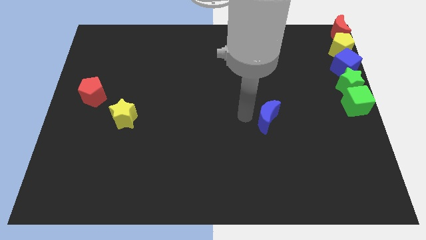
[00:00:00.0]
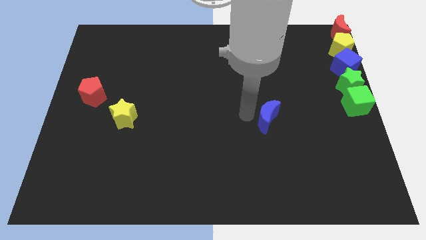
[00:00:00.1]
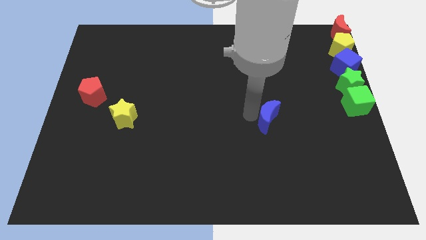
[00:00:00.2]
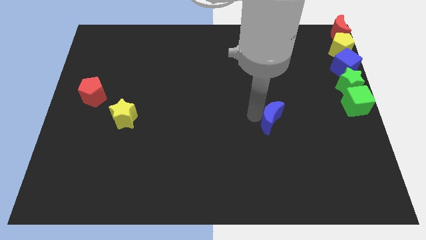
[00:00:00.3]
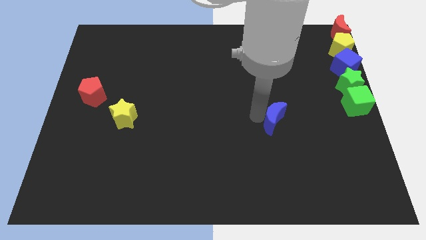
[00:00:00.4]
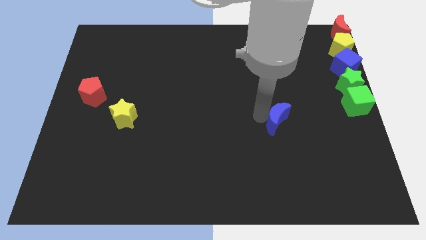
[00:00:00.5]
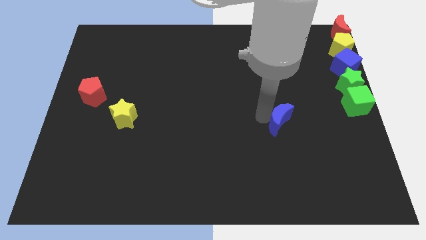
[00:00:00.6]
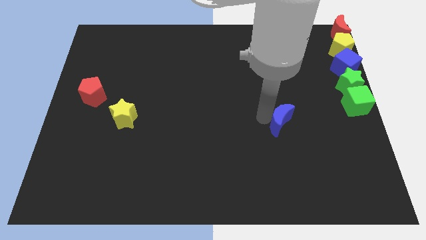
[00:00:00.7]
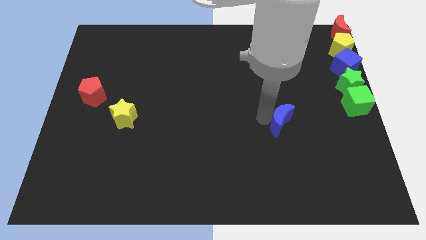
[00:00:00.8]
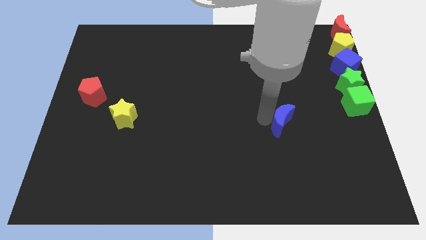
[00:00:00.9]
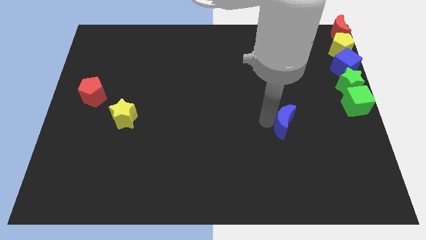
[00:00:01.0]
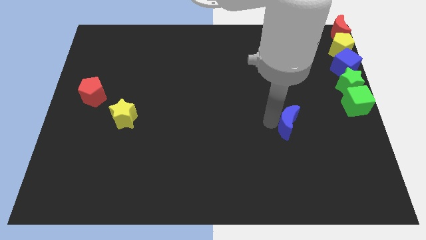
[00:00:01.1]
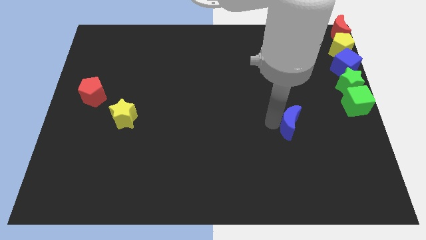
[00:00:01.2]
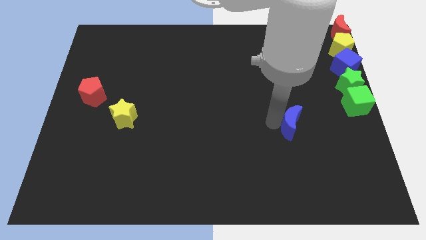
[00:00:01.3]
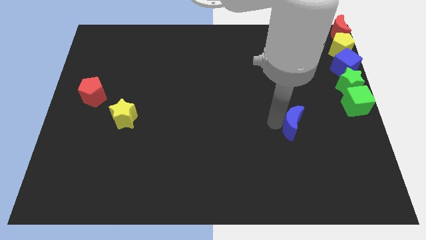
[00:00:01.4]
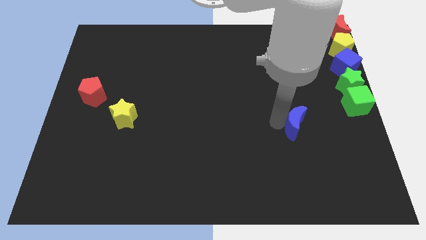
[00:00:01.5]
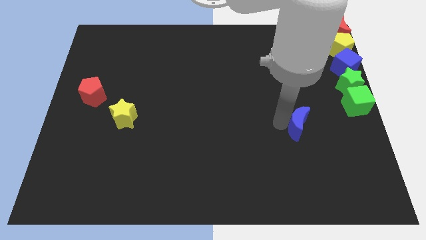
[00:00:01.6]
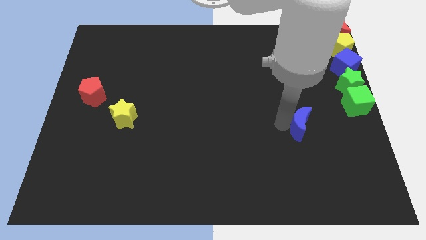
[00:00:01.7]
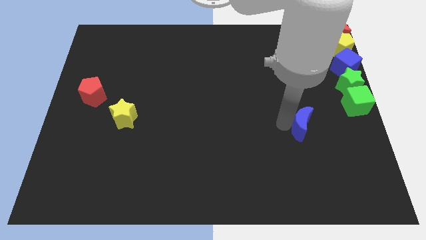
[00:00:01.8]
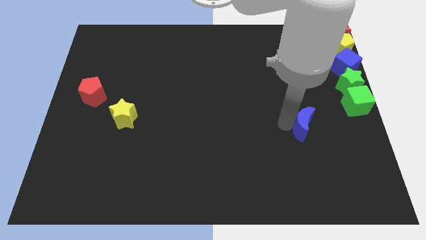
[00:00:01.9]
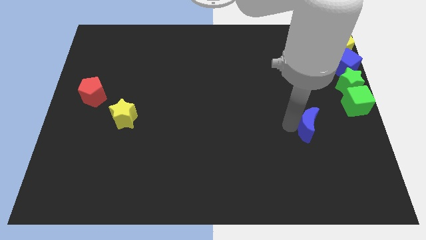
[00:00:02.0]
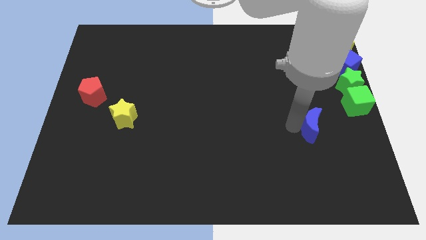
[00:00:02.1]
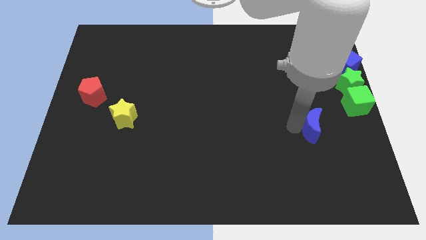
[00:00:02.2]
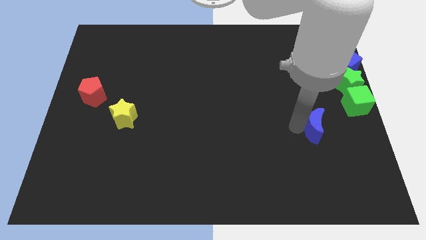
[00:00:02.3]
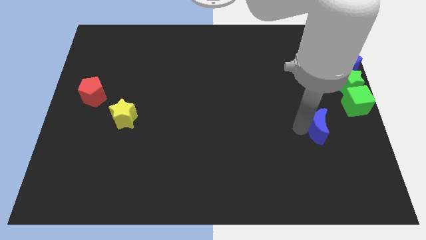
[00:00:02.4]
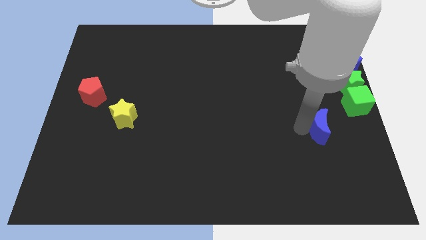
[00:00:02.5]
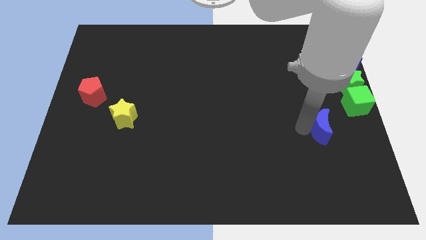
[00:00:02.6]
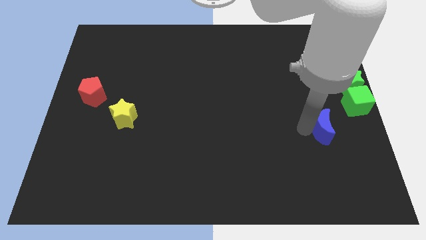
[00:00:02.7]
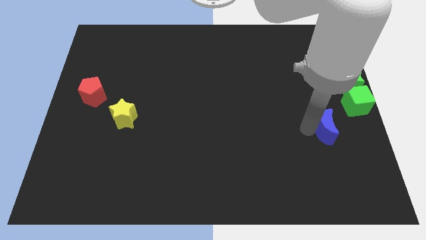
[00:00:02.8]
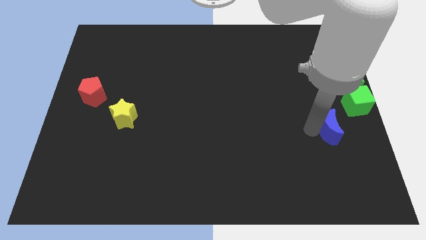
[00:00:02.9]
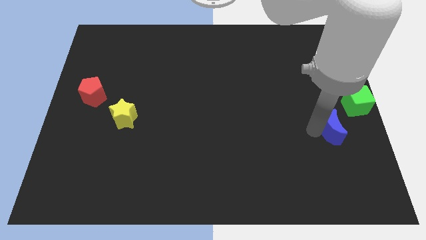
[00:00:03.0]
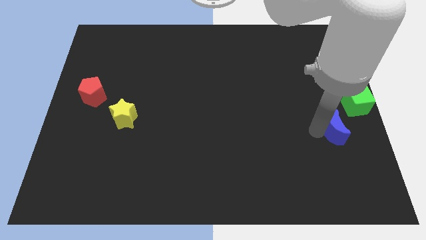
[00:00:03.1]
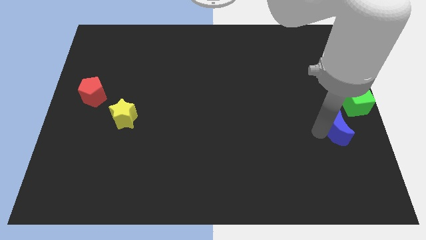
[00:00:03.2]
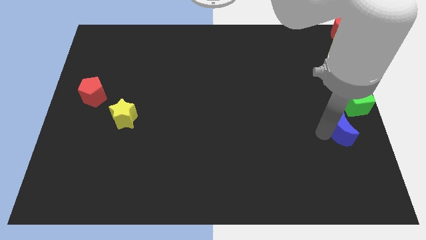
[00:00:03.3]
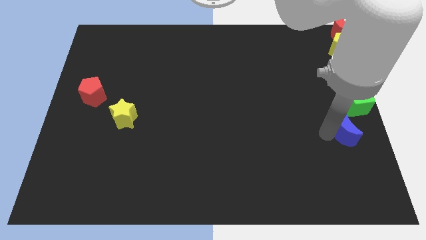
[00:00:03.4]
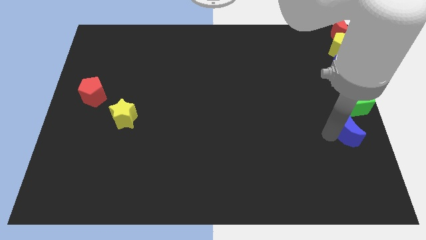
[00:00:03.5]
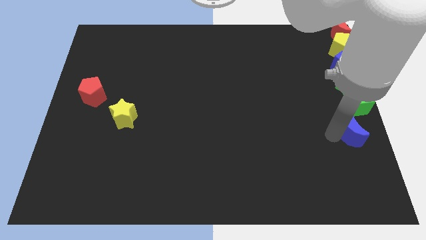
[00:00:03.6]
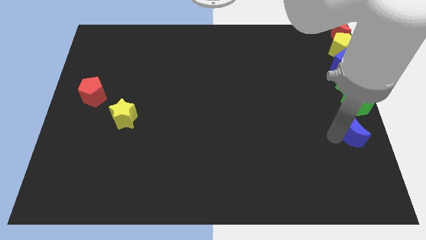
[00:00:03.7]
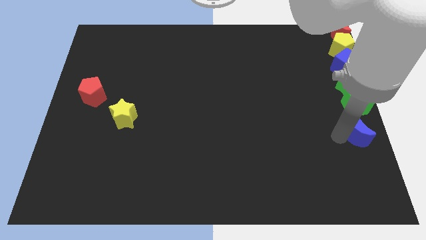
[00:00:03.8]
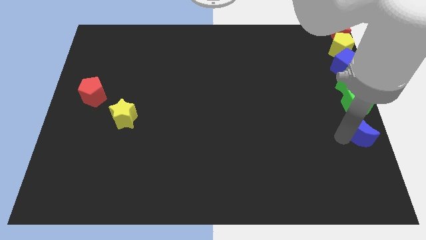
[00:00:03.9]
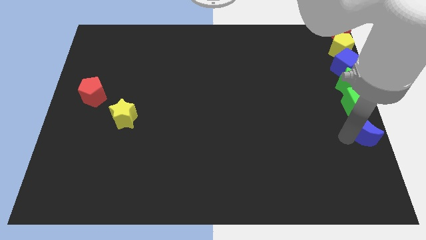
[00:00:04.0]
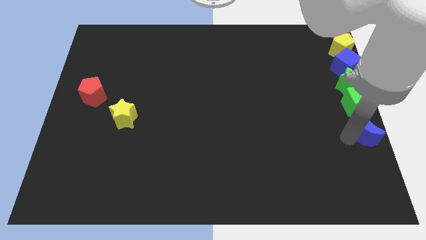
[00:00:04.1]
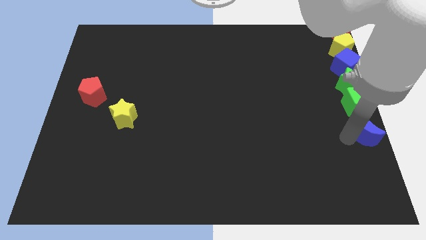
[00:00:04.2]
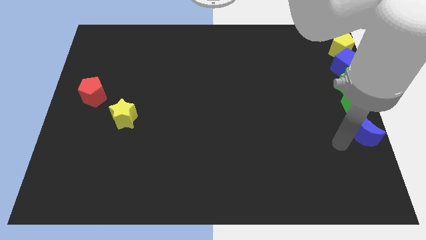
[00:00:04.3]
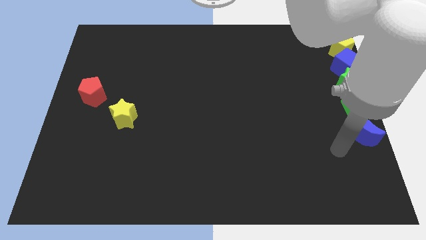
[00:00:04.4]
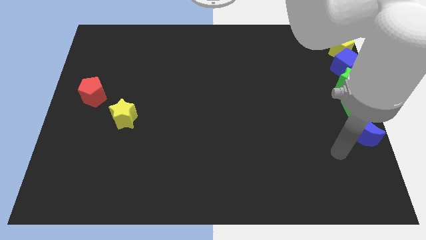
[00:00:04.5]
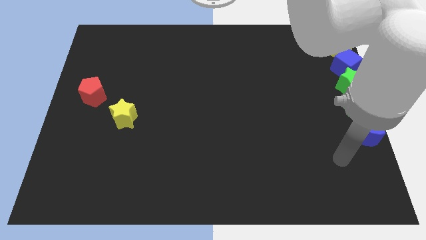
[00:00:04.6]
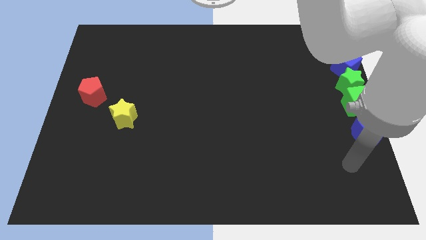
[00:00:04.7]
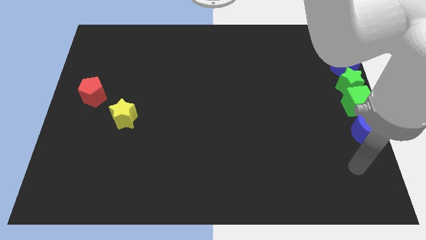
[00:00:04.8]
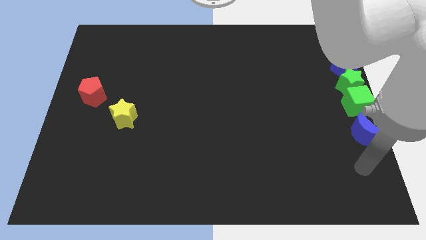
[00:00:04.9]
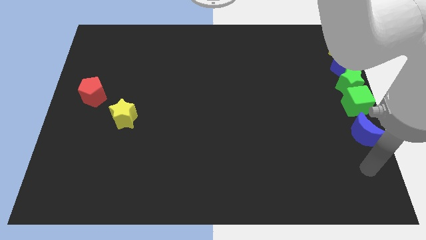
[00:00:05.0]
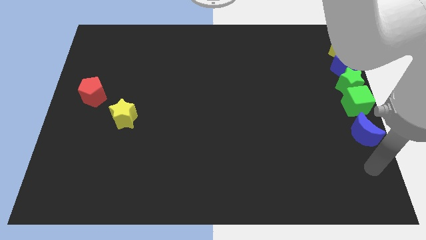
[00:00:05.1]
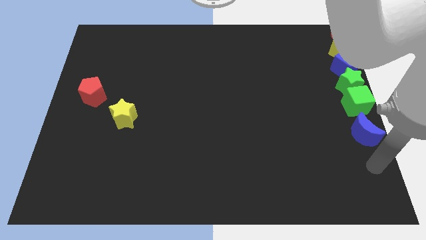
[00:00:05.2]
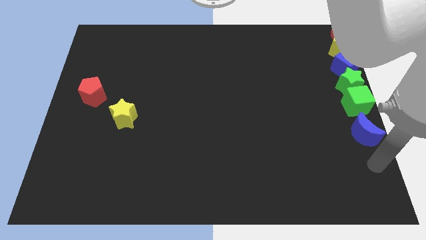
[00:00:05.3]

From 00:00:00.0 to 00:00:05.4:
add the blue moon down to the green square of the vertical line of blocks which are at the right side

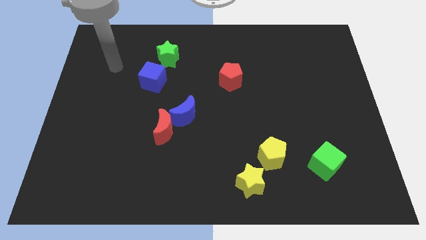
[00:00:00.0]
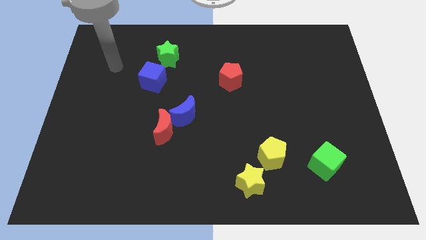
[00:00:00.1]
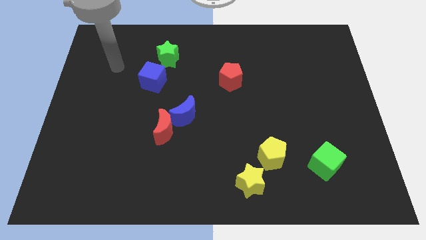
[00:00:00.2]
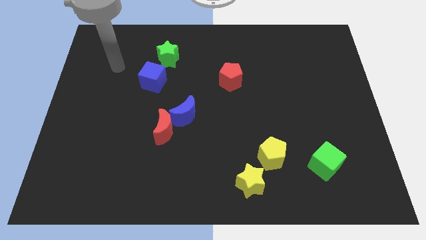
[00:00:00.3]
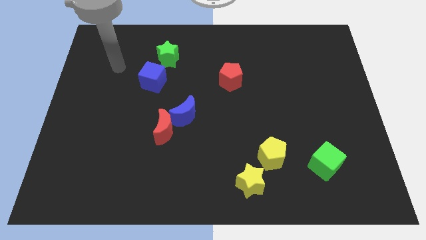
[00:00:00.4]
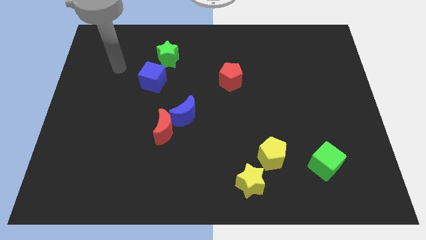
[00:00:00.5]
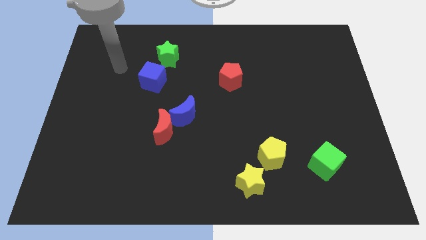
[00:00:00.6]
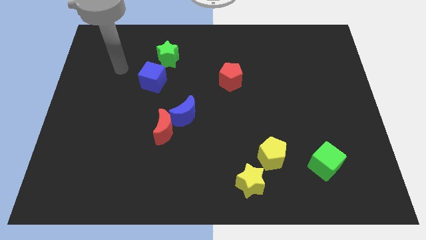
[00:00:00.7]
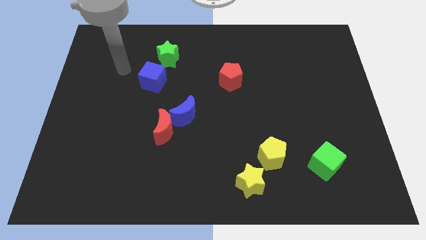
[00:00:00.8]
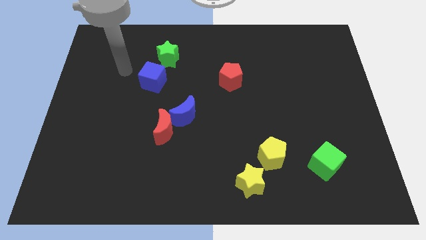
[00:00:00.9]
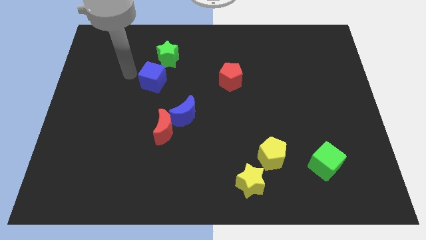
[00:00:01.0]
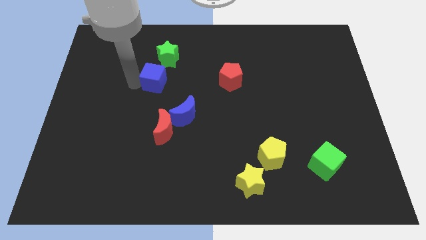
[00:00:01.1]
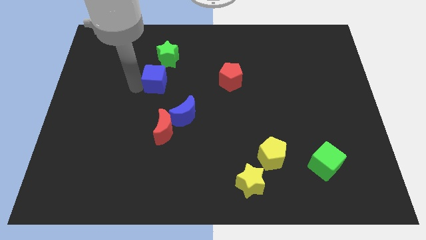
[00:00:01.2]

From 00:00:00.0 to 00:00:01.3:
tap the blue cube

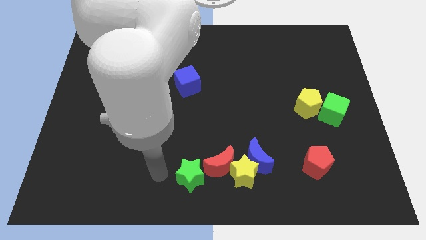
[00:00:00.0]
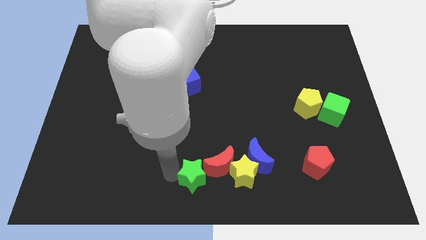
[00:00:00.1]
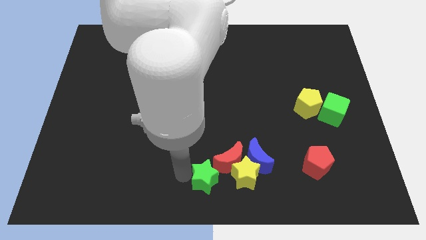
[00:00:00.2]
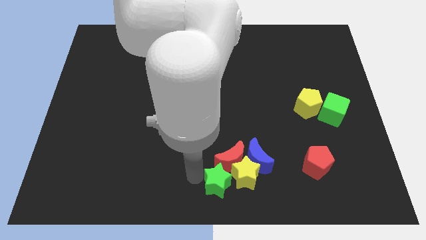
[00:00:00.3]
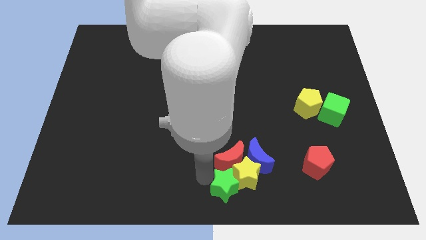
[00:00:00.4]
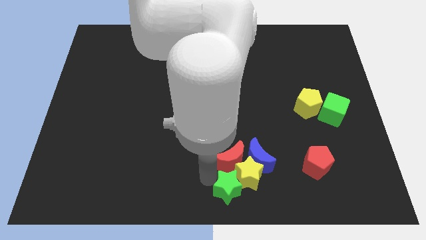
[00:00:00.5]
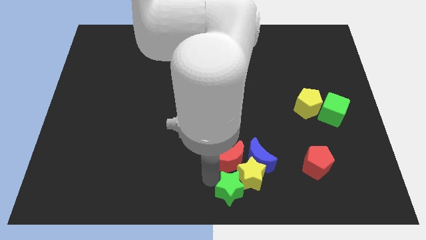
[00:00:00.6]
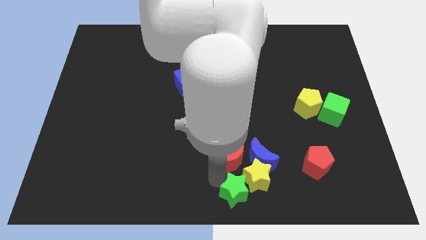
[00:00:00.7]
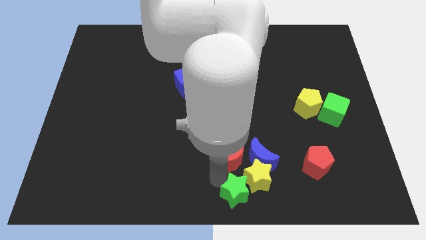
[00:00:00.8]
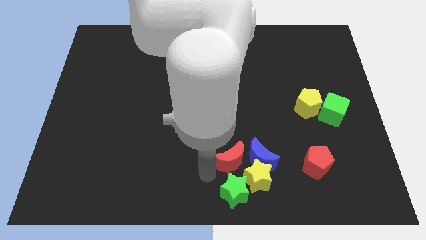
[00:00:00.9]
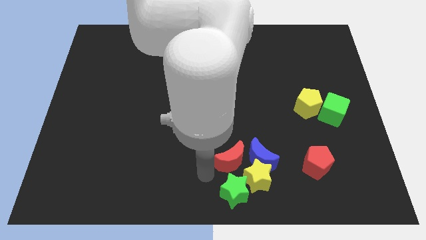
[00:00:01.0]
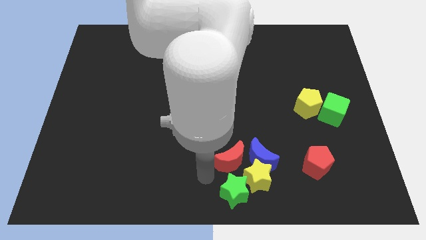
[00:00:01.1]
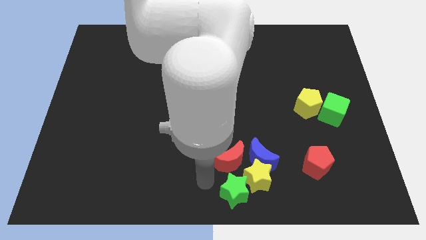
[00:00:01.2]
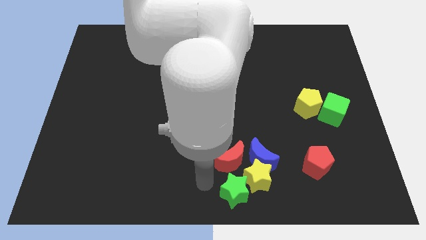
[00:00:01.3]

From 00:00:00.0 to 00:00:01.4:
move the green star into the yellow star

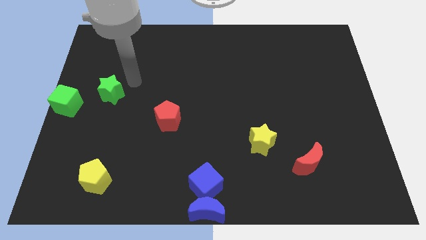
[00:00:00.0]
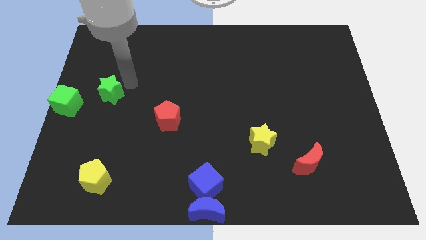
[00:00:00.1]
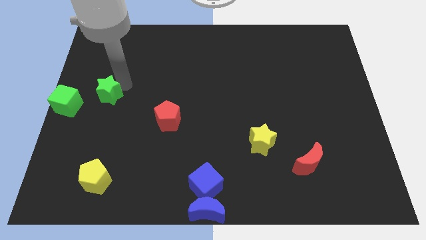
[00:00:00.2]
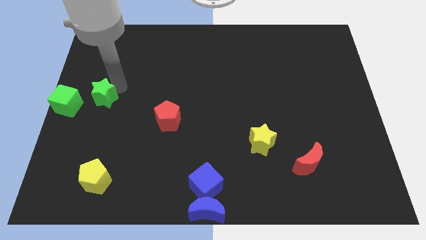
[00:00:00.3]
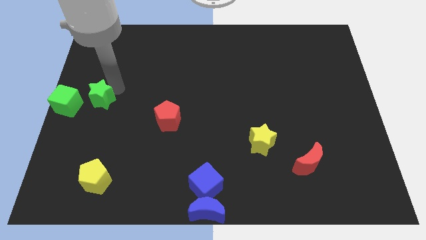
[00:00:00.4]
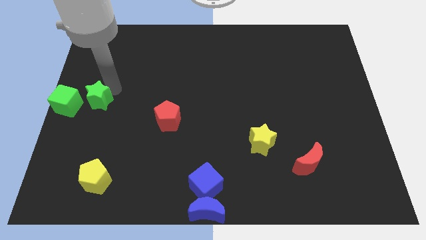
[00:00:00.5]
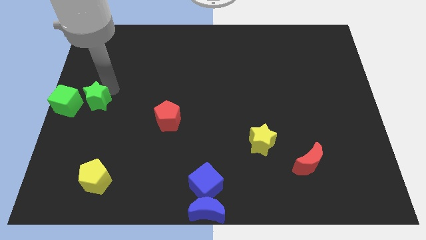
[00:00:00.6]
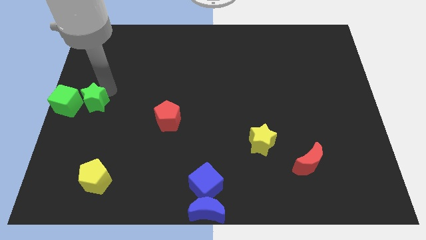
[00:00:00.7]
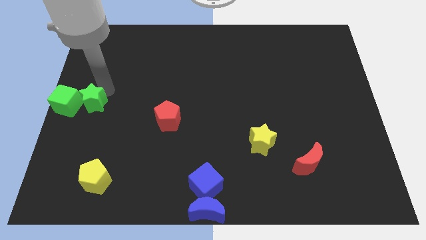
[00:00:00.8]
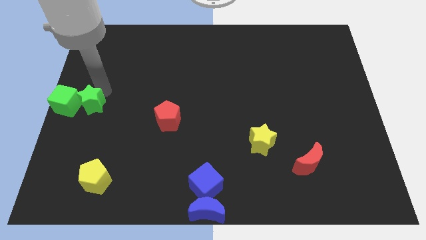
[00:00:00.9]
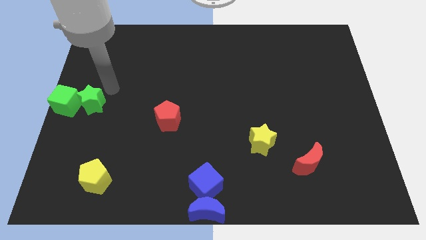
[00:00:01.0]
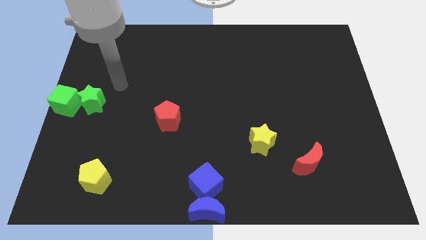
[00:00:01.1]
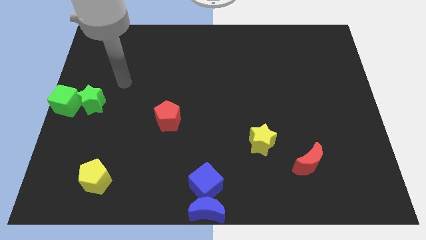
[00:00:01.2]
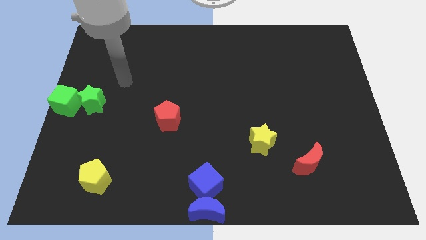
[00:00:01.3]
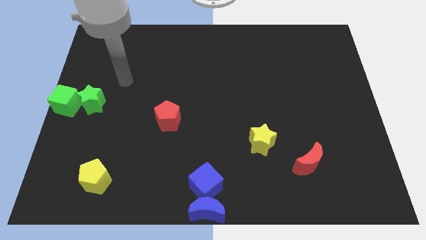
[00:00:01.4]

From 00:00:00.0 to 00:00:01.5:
move the green star into the green cube
